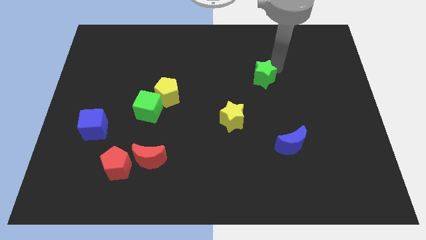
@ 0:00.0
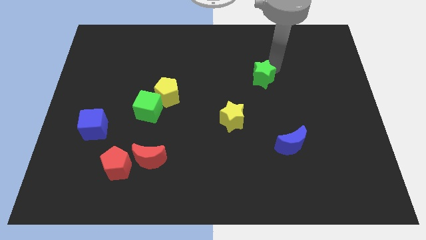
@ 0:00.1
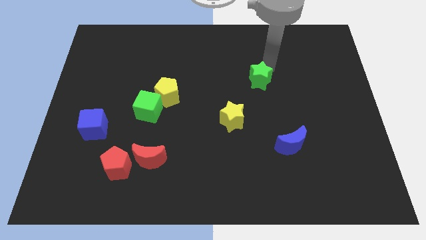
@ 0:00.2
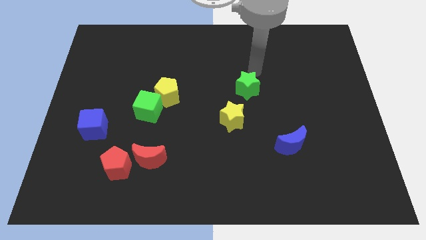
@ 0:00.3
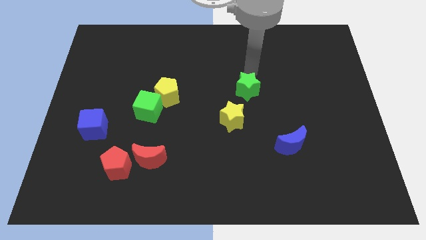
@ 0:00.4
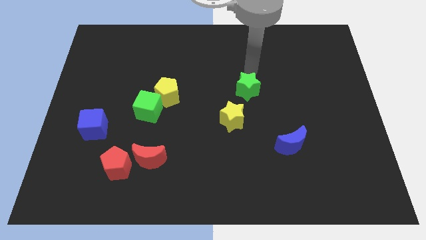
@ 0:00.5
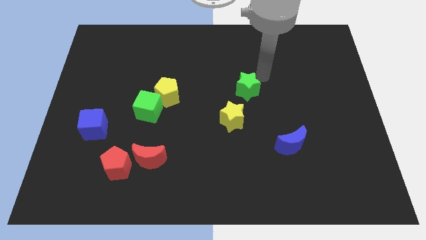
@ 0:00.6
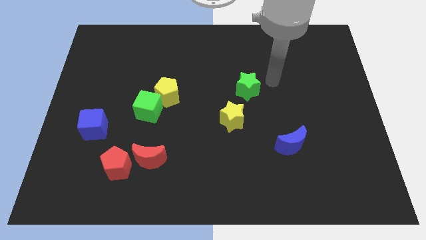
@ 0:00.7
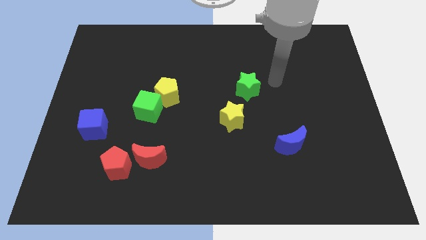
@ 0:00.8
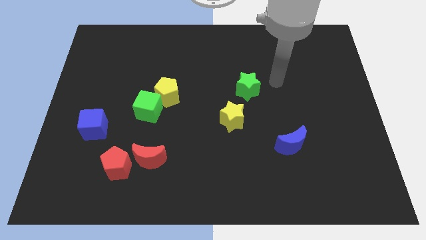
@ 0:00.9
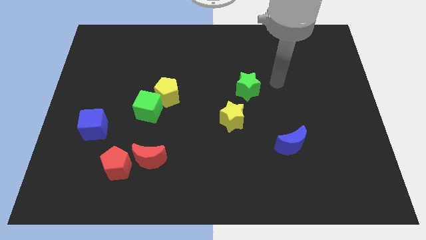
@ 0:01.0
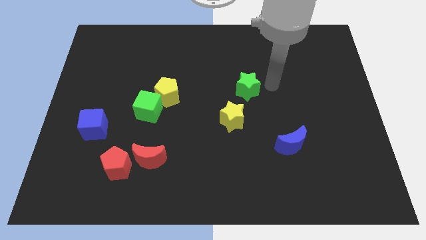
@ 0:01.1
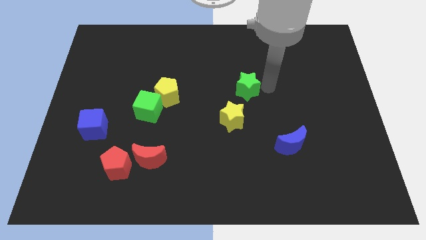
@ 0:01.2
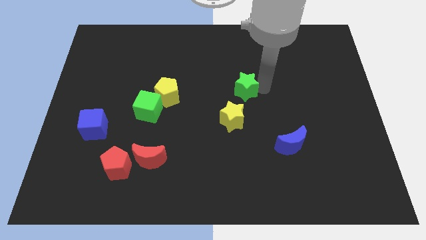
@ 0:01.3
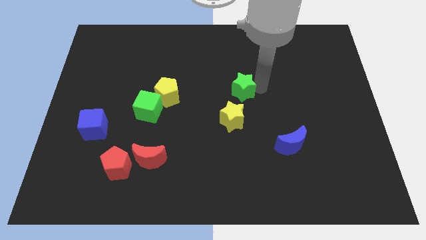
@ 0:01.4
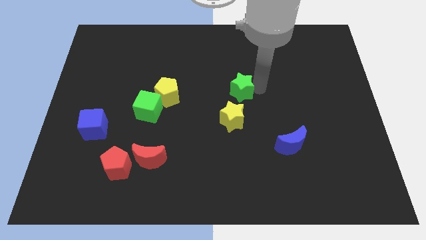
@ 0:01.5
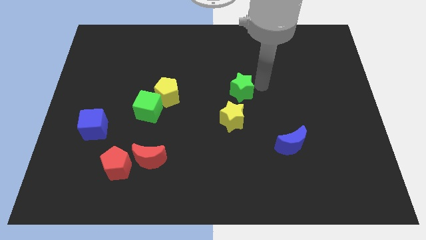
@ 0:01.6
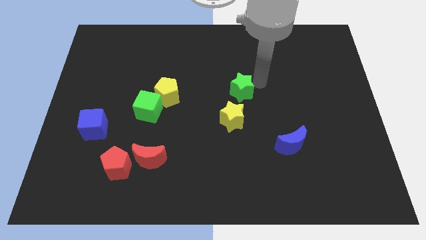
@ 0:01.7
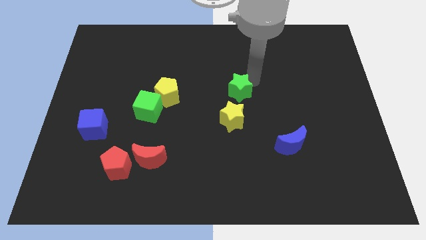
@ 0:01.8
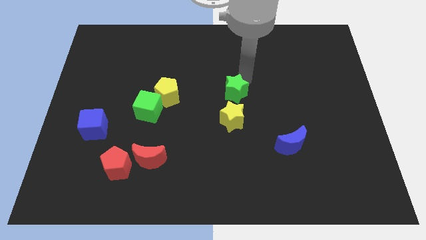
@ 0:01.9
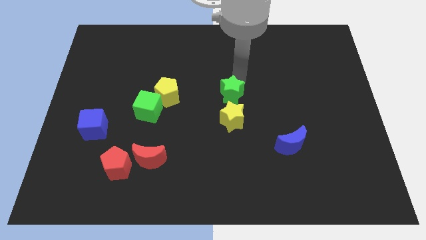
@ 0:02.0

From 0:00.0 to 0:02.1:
push the green star to the top of the yellow star

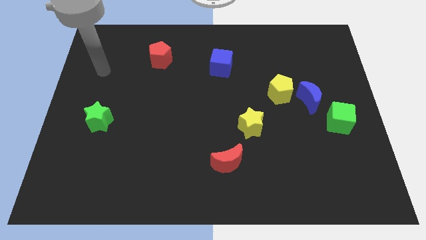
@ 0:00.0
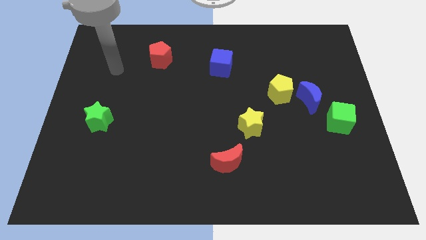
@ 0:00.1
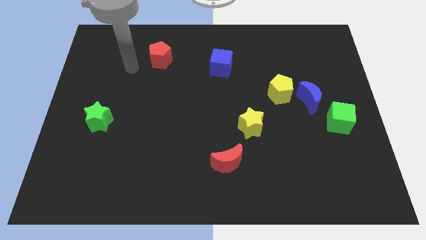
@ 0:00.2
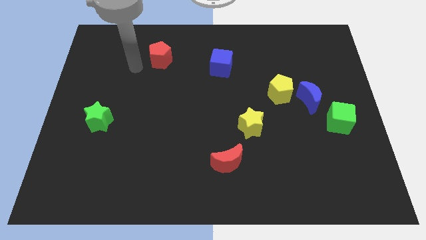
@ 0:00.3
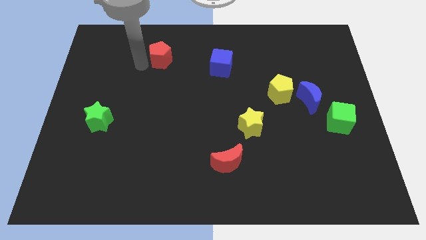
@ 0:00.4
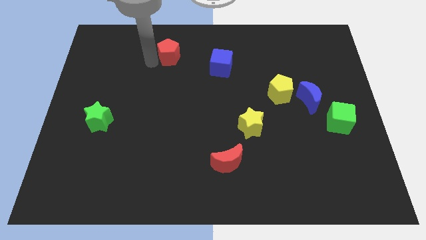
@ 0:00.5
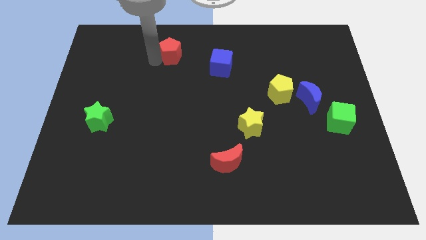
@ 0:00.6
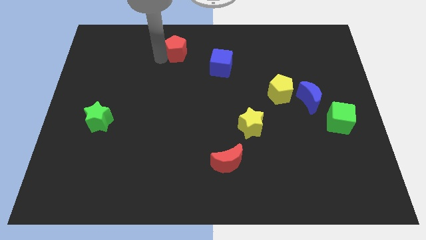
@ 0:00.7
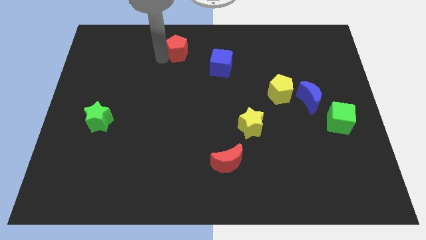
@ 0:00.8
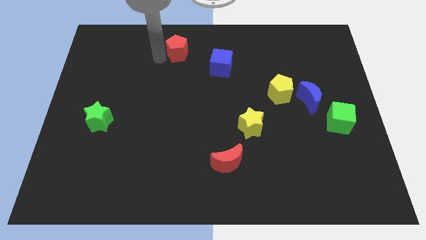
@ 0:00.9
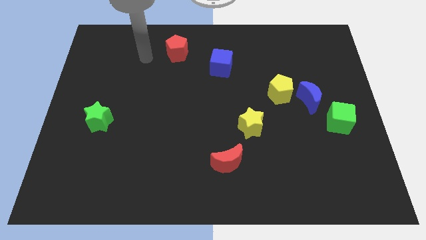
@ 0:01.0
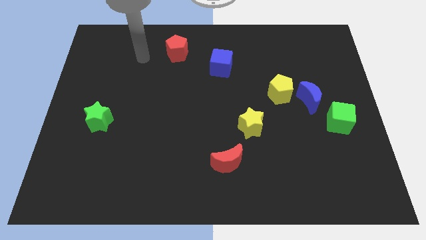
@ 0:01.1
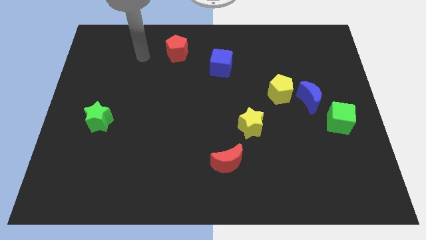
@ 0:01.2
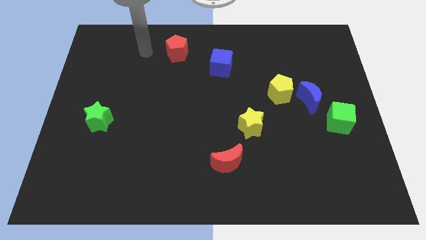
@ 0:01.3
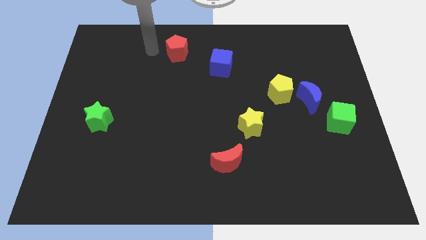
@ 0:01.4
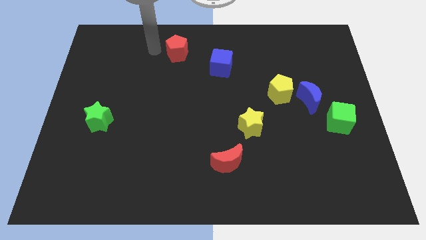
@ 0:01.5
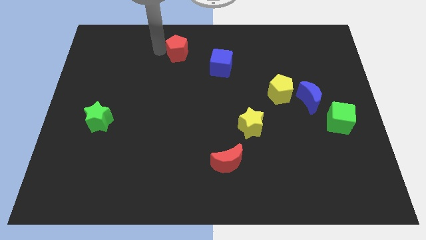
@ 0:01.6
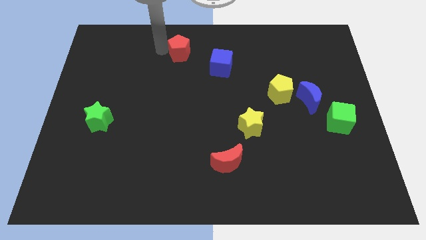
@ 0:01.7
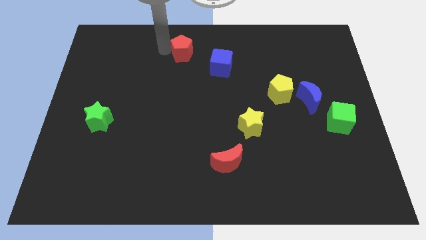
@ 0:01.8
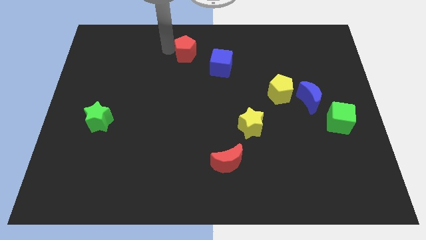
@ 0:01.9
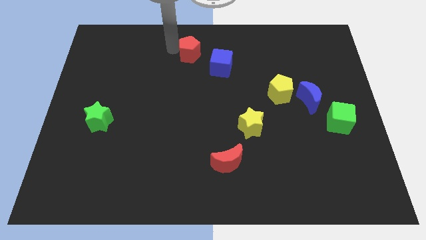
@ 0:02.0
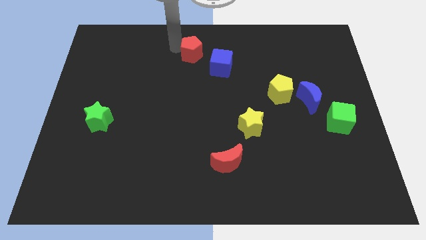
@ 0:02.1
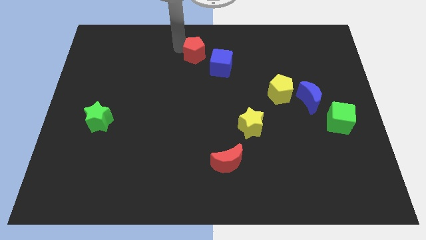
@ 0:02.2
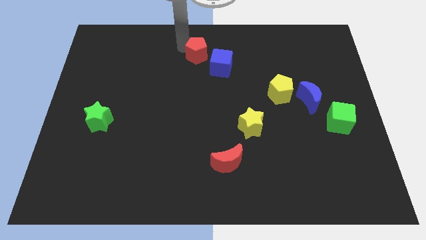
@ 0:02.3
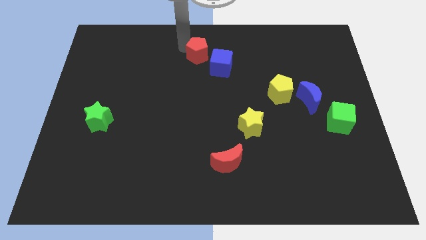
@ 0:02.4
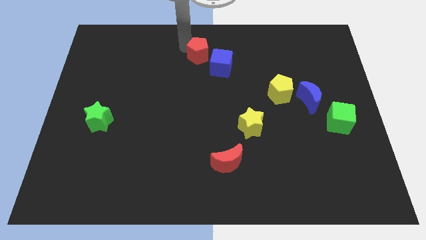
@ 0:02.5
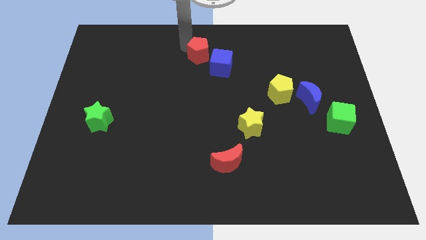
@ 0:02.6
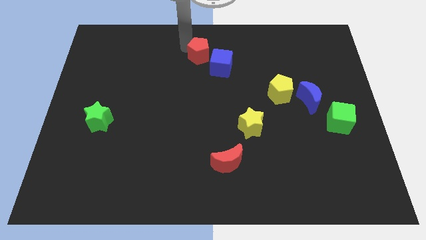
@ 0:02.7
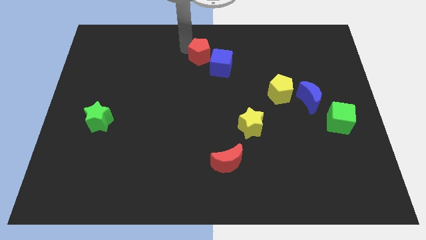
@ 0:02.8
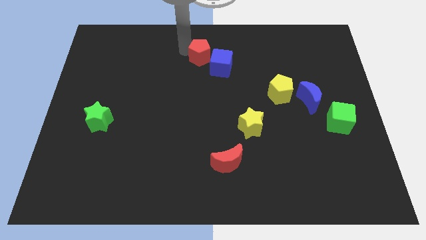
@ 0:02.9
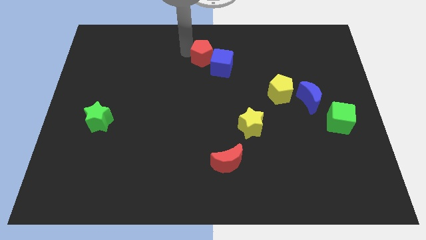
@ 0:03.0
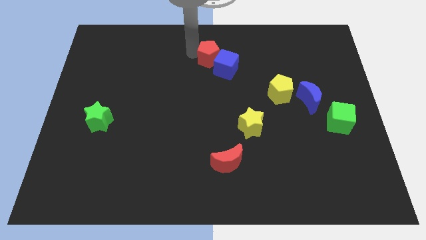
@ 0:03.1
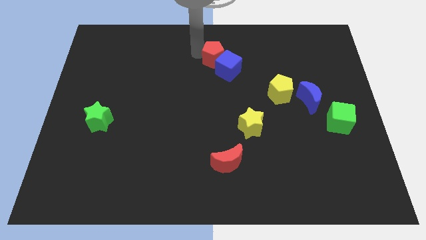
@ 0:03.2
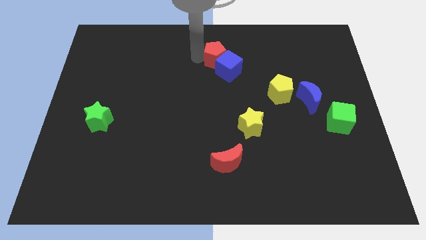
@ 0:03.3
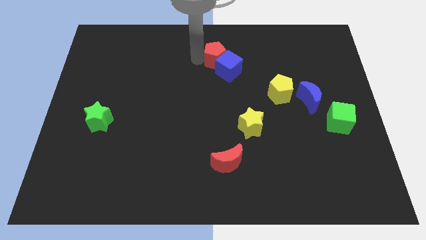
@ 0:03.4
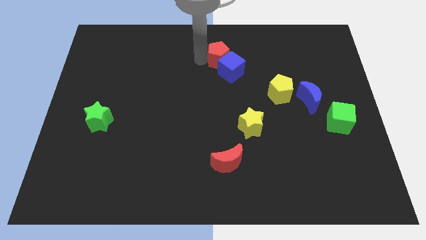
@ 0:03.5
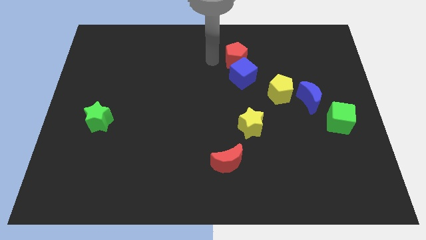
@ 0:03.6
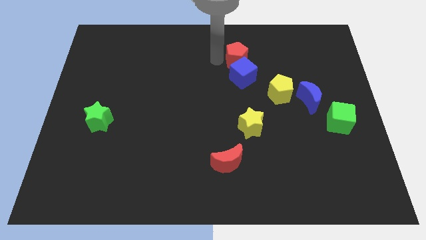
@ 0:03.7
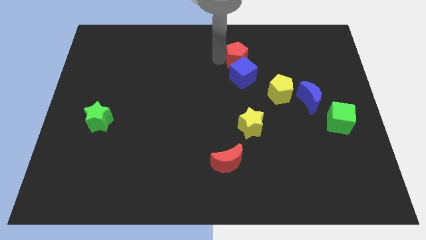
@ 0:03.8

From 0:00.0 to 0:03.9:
move the red pentagon along with the blue cube to the top side of the yellow star

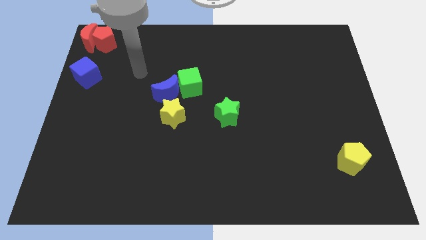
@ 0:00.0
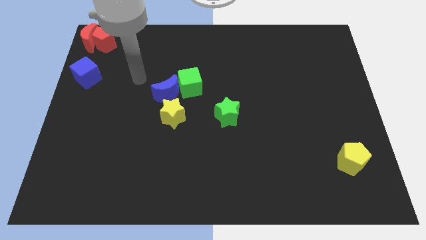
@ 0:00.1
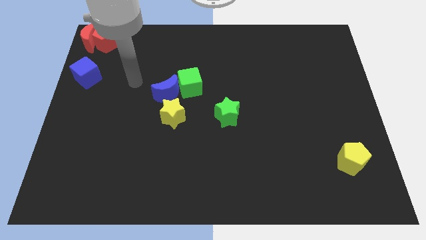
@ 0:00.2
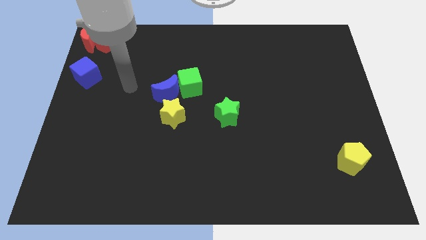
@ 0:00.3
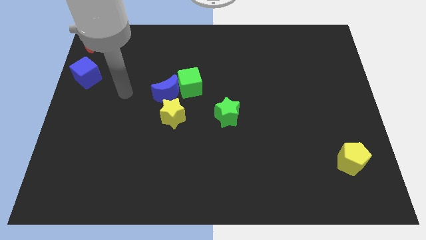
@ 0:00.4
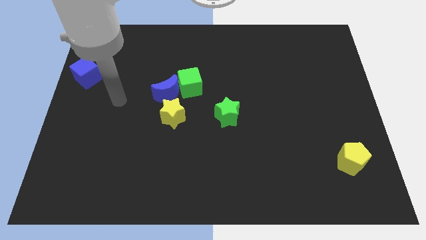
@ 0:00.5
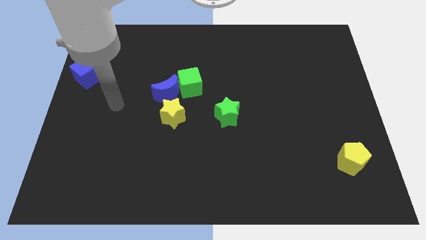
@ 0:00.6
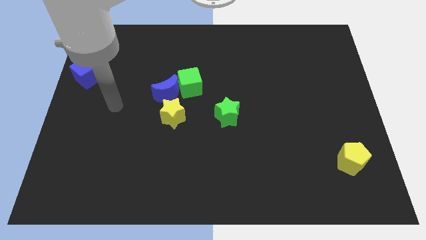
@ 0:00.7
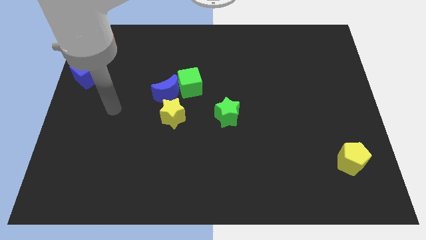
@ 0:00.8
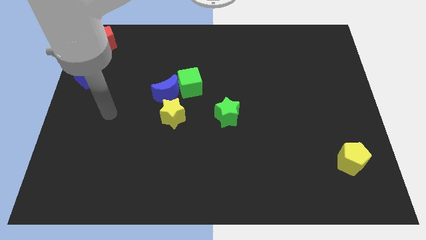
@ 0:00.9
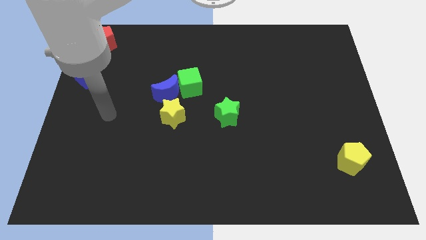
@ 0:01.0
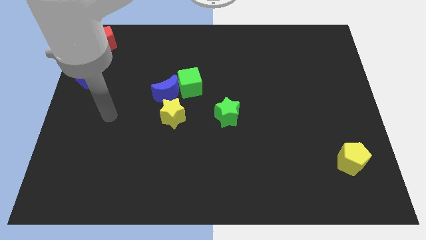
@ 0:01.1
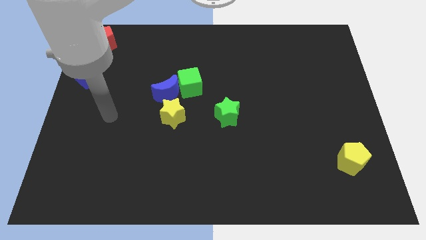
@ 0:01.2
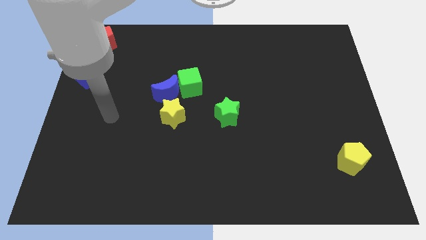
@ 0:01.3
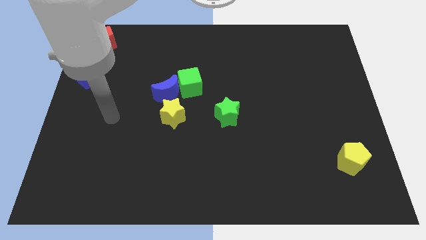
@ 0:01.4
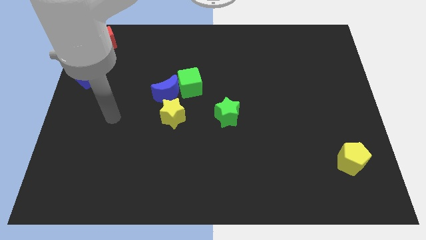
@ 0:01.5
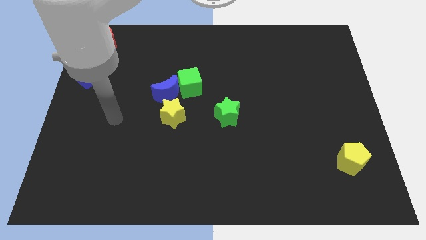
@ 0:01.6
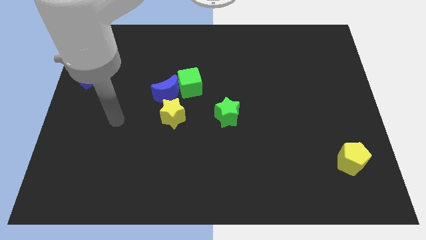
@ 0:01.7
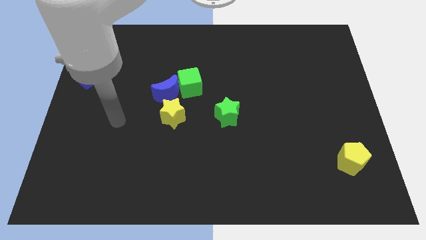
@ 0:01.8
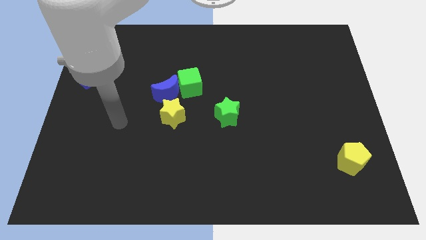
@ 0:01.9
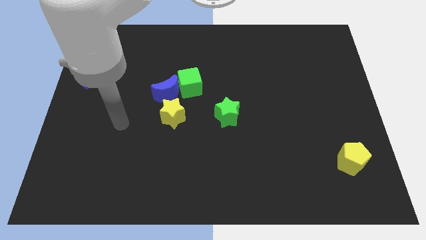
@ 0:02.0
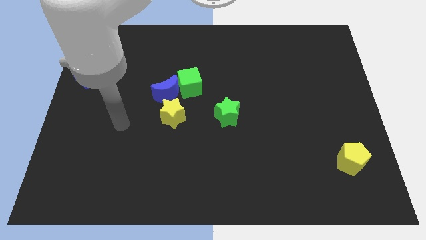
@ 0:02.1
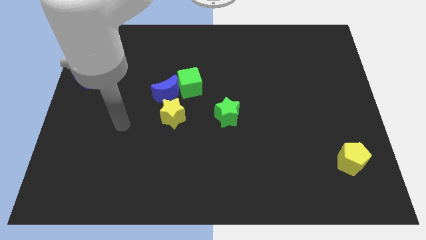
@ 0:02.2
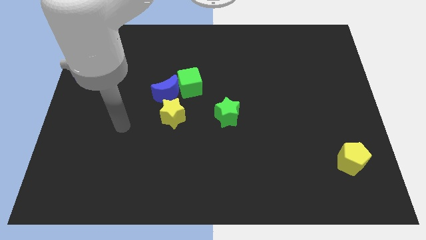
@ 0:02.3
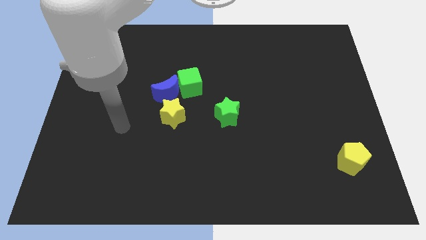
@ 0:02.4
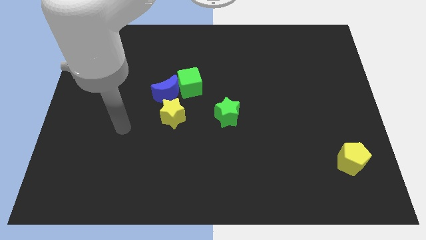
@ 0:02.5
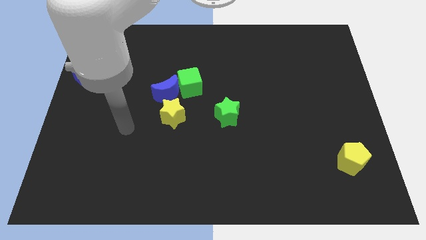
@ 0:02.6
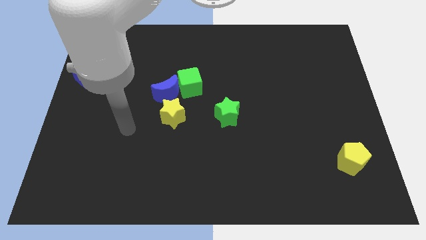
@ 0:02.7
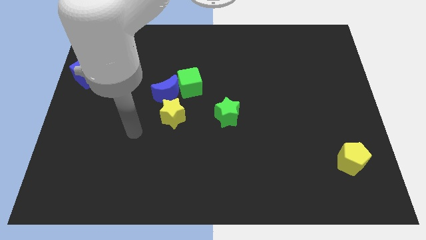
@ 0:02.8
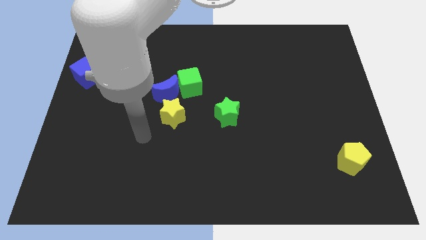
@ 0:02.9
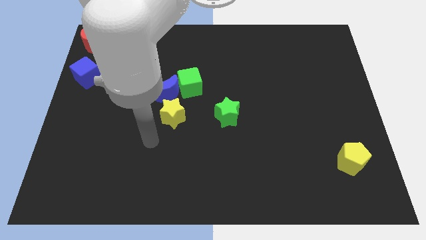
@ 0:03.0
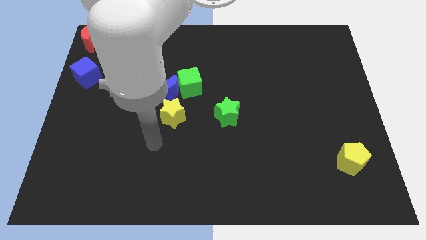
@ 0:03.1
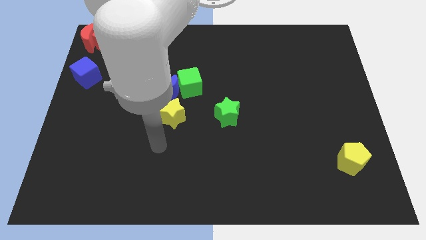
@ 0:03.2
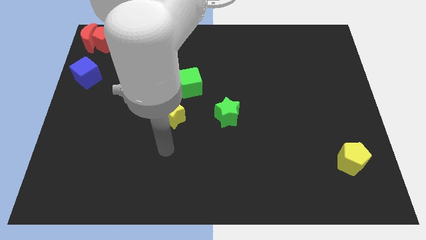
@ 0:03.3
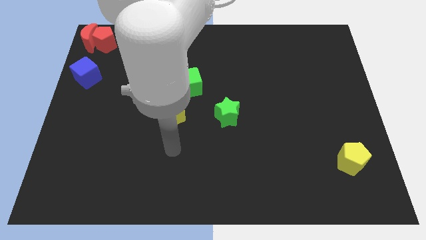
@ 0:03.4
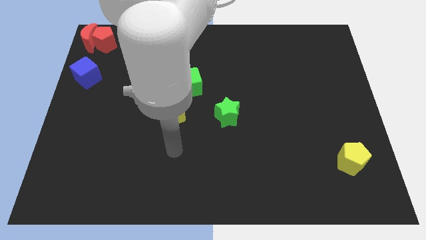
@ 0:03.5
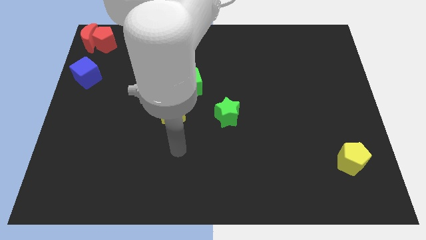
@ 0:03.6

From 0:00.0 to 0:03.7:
move your arm at the bottom of the yellow star
